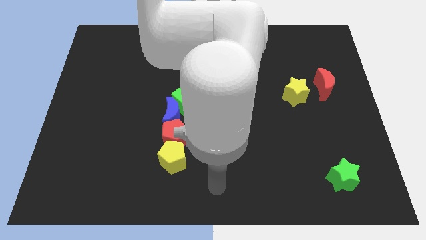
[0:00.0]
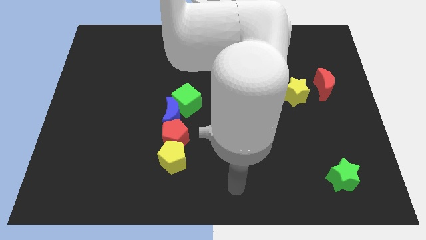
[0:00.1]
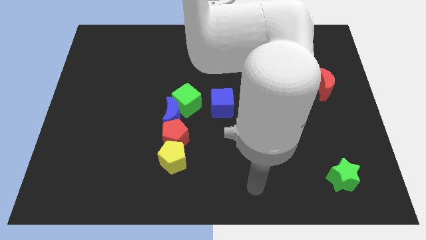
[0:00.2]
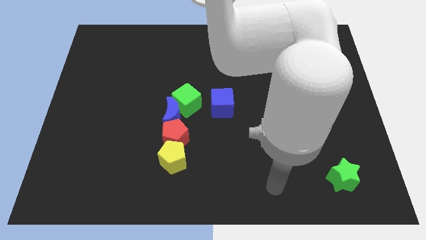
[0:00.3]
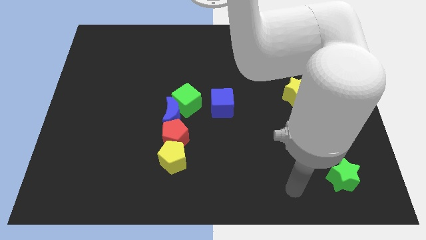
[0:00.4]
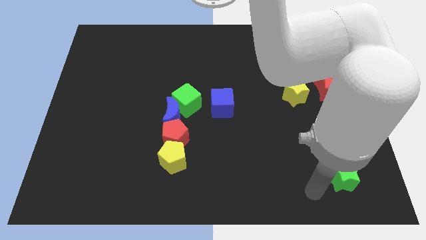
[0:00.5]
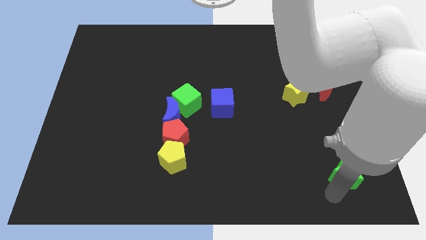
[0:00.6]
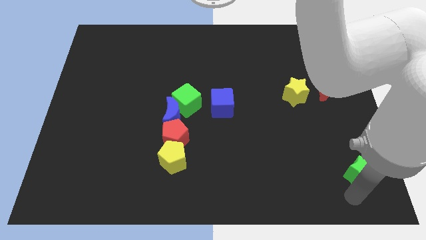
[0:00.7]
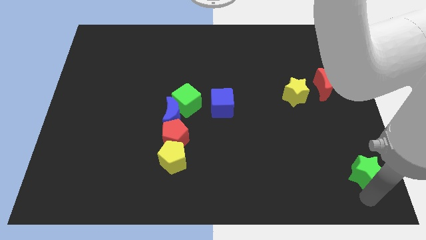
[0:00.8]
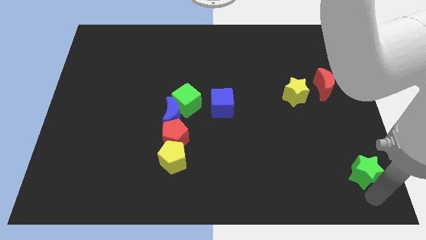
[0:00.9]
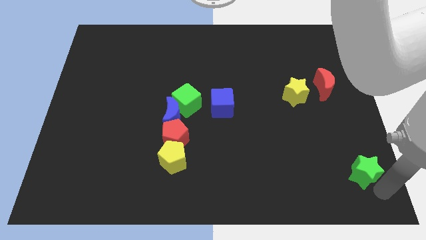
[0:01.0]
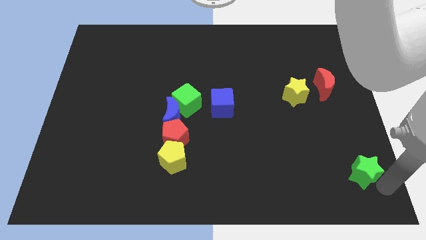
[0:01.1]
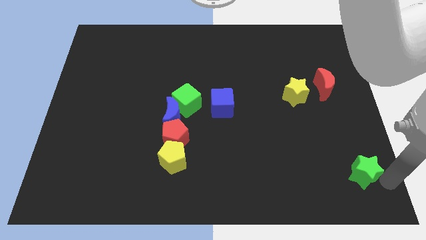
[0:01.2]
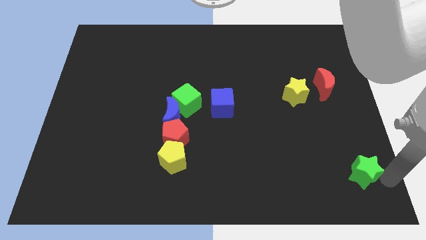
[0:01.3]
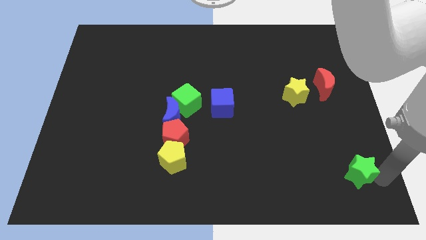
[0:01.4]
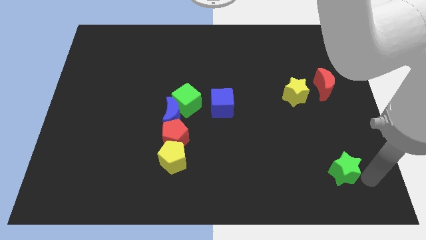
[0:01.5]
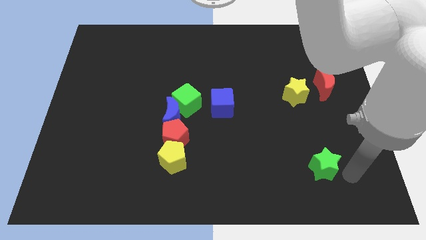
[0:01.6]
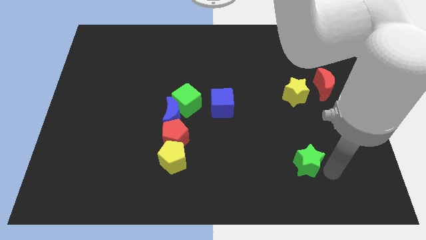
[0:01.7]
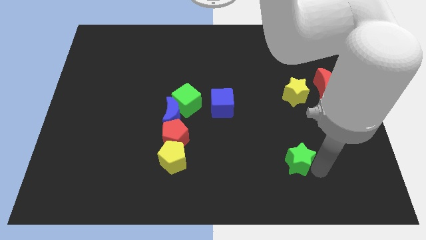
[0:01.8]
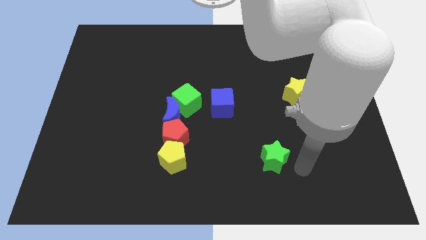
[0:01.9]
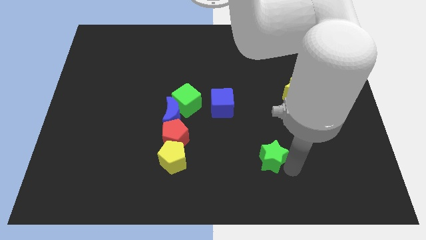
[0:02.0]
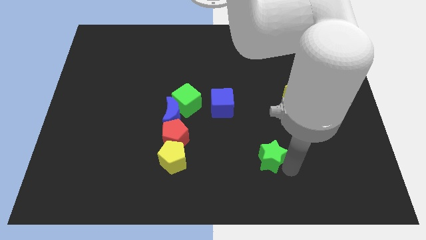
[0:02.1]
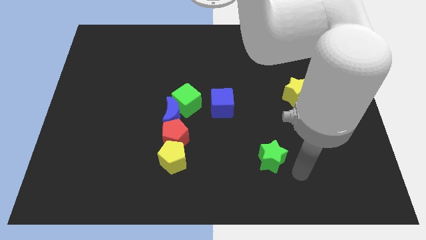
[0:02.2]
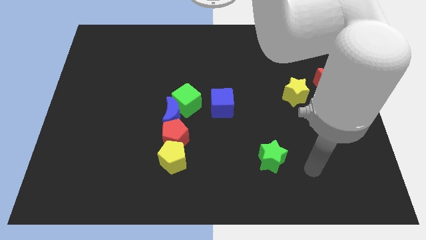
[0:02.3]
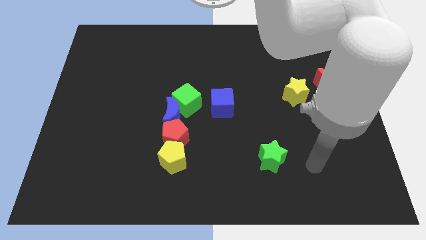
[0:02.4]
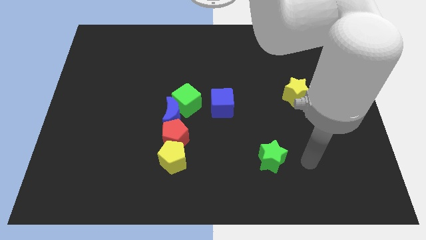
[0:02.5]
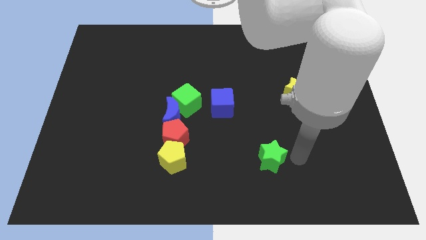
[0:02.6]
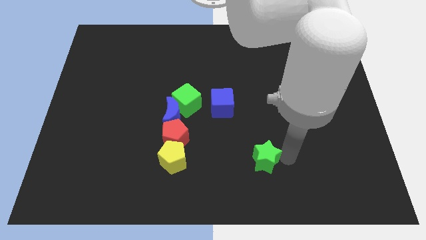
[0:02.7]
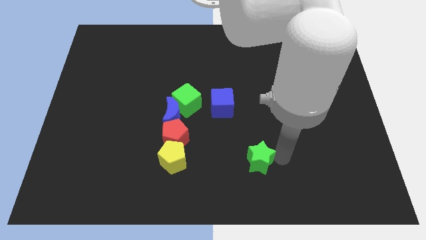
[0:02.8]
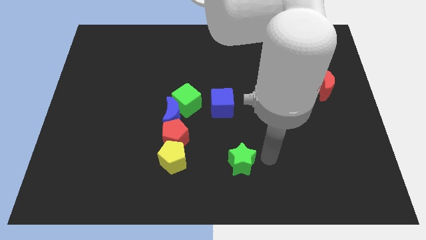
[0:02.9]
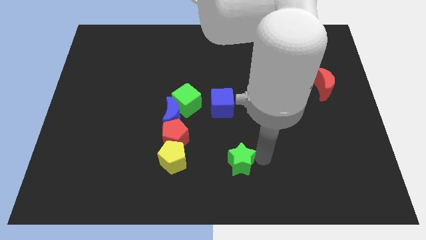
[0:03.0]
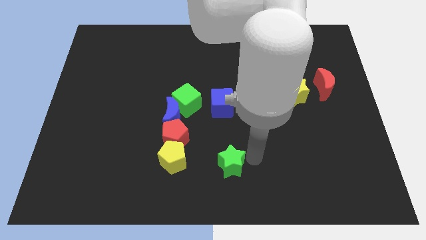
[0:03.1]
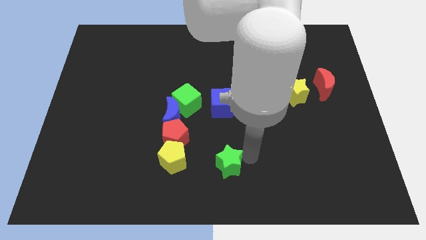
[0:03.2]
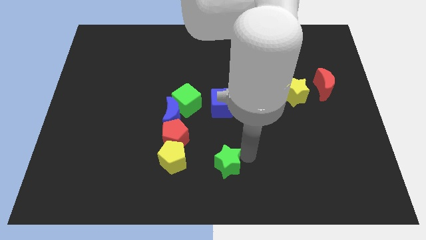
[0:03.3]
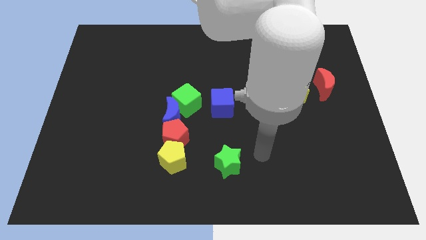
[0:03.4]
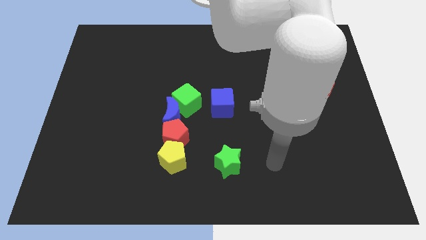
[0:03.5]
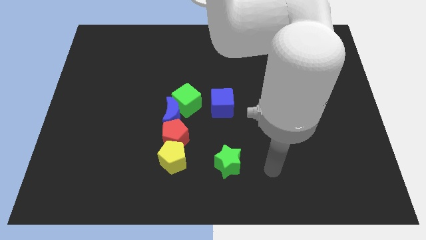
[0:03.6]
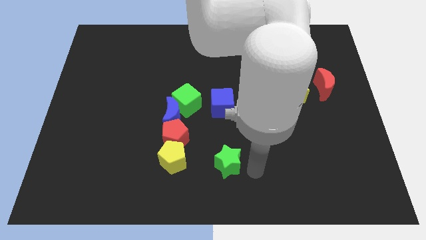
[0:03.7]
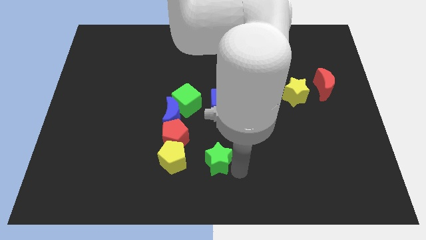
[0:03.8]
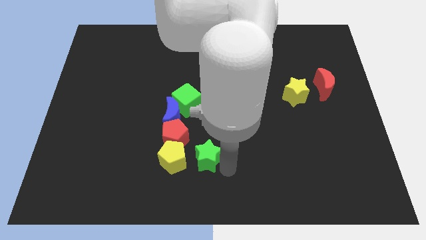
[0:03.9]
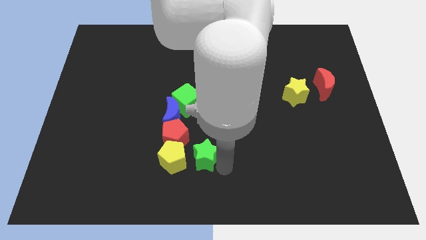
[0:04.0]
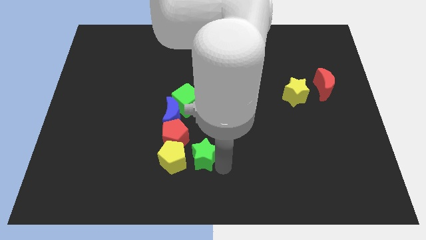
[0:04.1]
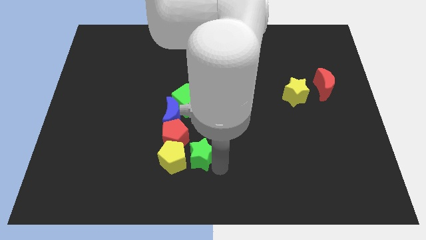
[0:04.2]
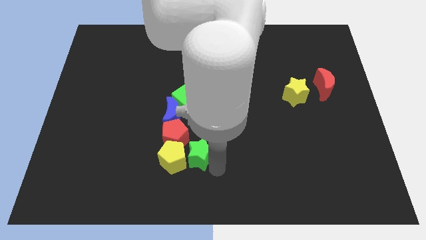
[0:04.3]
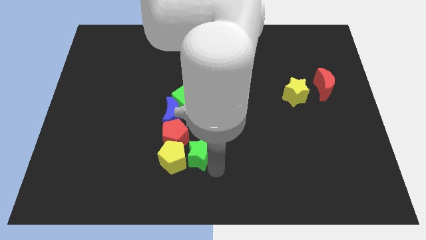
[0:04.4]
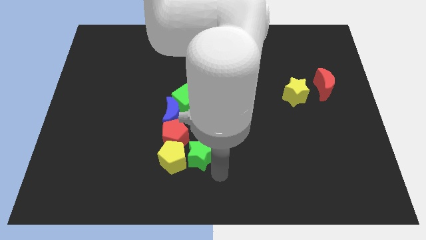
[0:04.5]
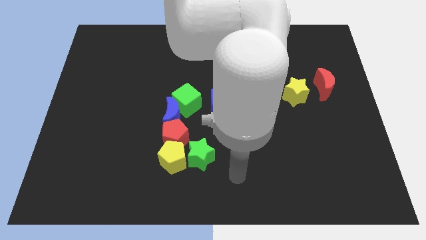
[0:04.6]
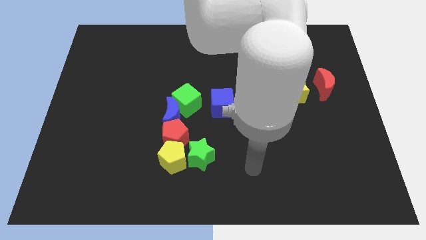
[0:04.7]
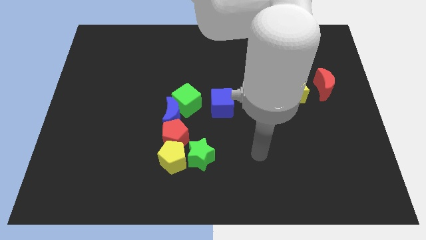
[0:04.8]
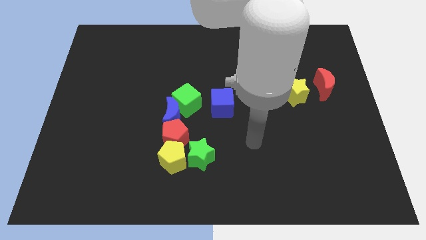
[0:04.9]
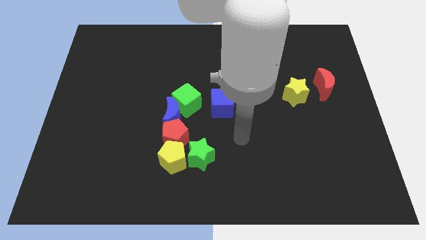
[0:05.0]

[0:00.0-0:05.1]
slide green star into yellow pentagon

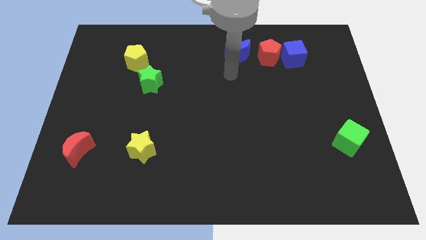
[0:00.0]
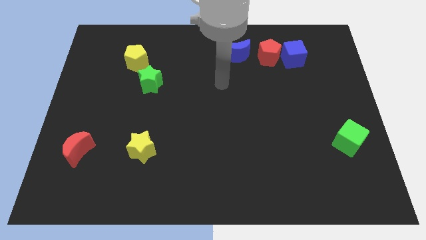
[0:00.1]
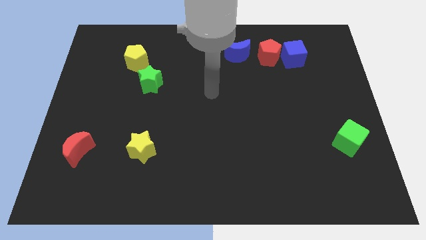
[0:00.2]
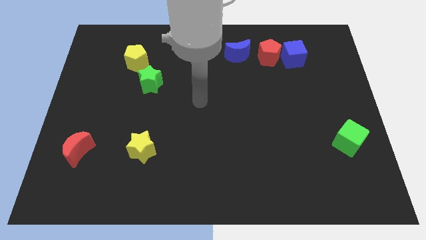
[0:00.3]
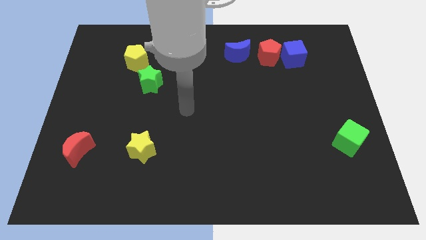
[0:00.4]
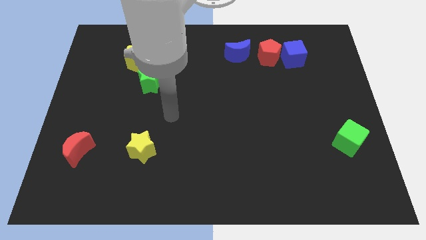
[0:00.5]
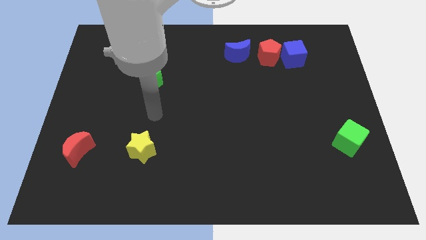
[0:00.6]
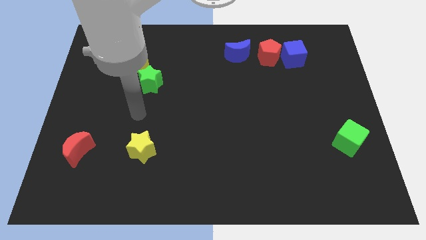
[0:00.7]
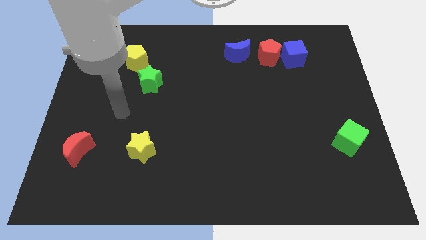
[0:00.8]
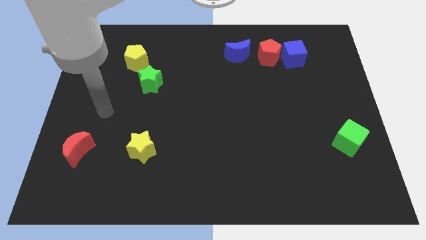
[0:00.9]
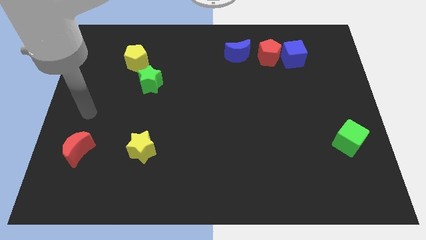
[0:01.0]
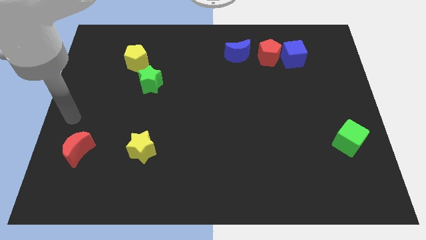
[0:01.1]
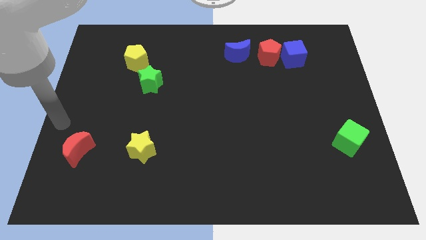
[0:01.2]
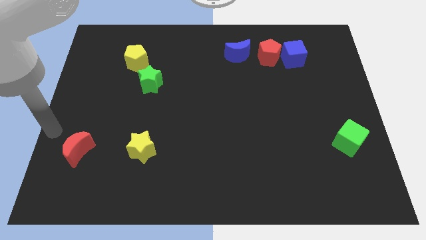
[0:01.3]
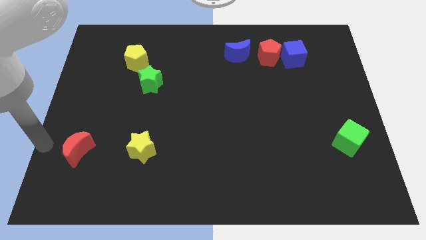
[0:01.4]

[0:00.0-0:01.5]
place the hand to left side of the red crescent

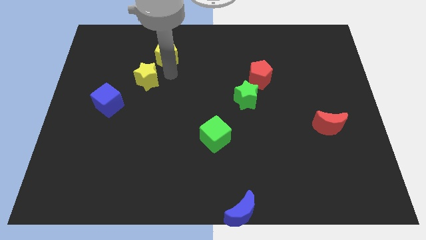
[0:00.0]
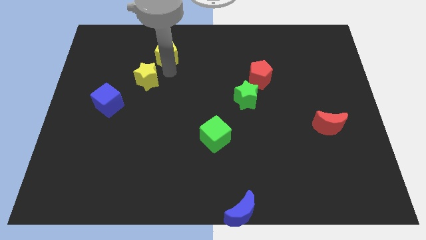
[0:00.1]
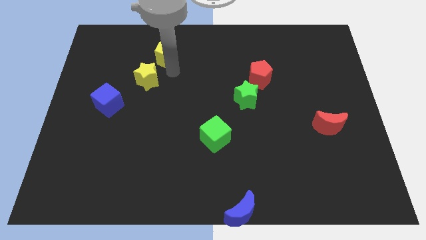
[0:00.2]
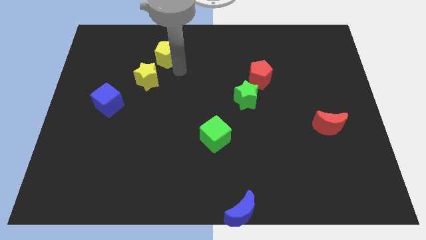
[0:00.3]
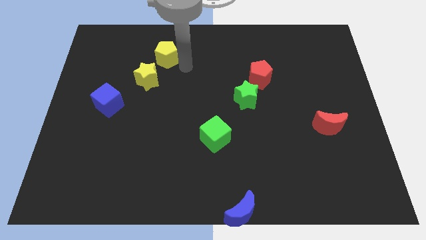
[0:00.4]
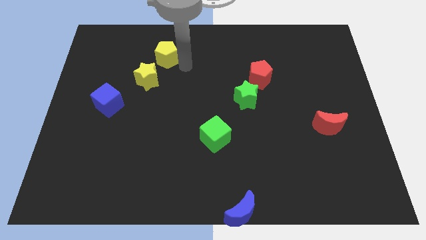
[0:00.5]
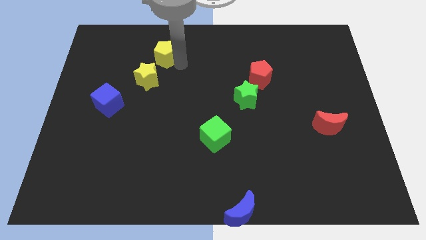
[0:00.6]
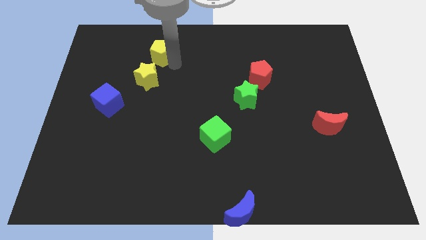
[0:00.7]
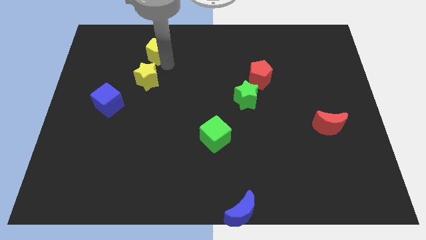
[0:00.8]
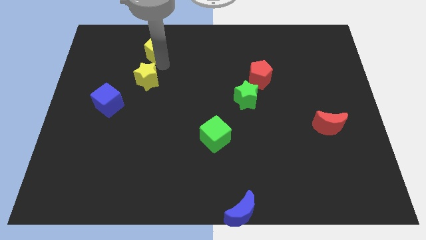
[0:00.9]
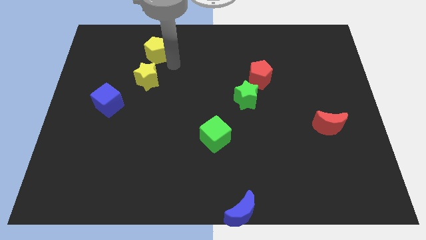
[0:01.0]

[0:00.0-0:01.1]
place yellow pentagon above yellow start

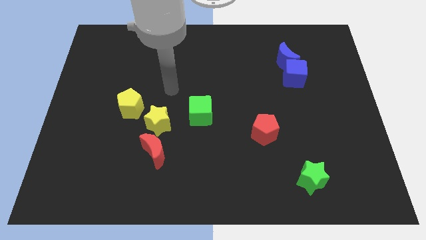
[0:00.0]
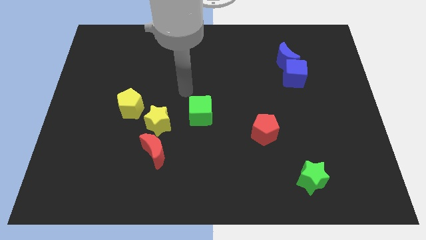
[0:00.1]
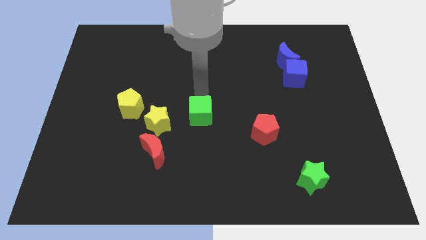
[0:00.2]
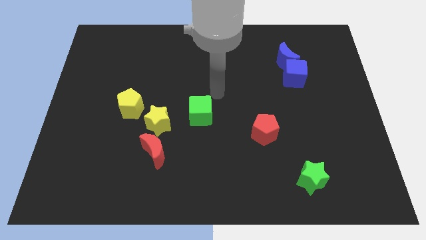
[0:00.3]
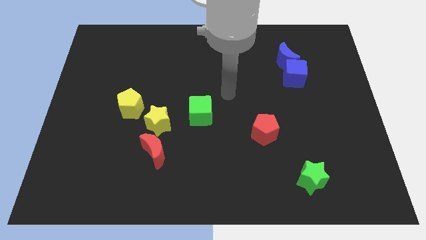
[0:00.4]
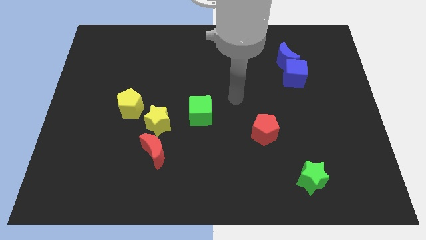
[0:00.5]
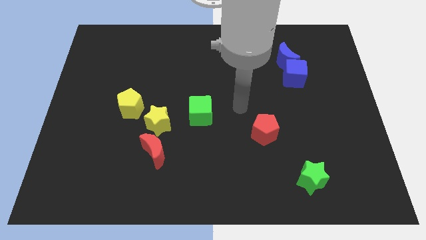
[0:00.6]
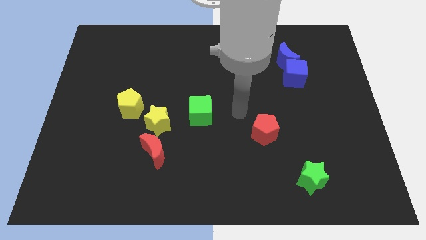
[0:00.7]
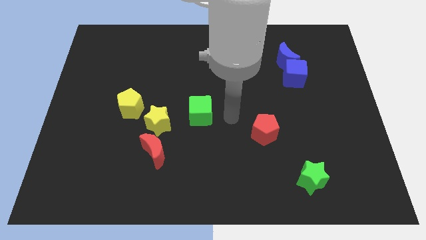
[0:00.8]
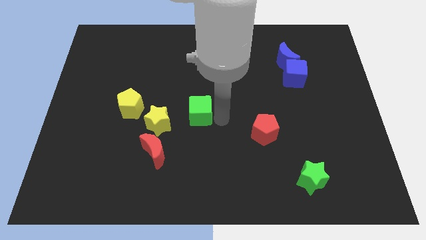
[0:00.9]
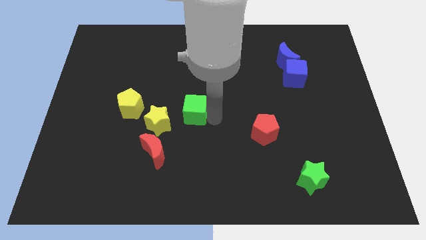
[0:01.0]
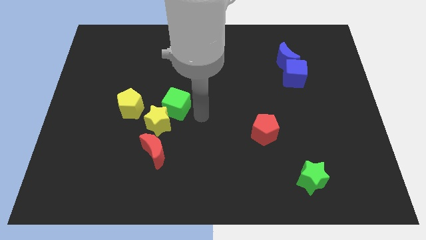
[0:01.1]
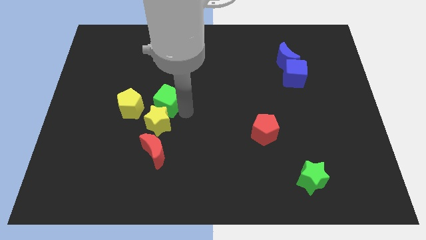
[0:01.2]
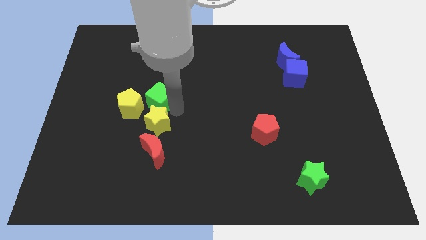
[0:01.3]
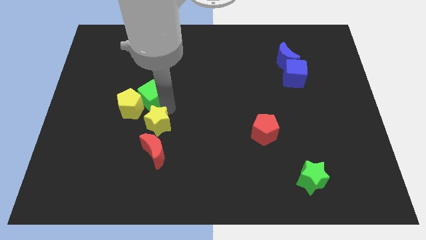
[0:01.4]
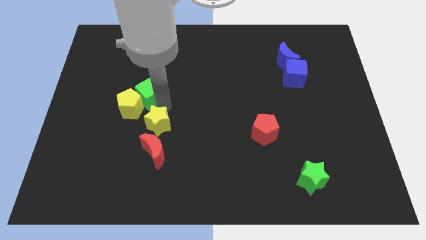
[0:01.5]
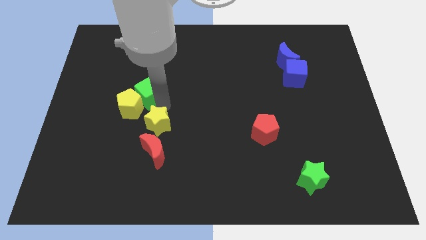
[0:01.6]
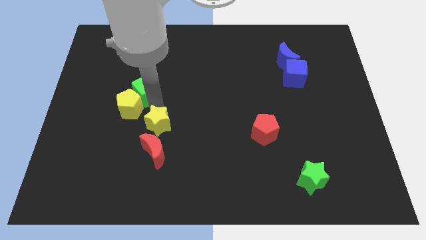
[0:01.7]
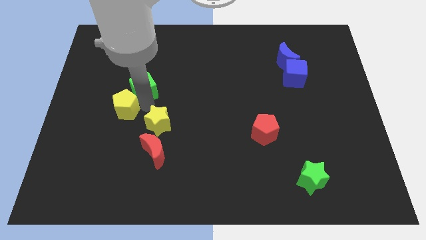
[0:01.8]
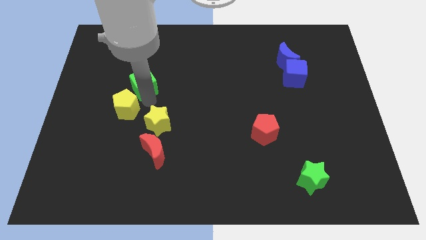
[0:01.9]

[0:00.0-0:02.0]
push the green cube diagonally top left to the yellow star
